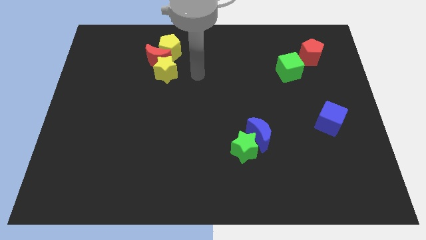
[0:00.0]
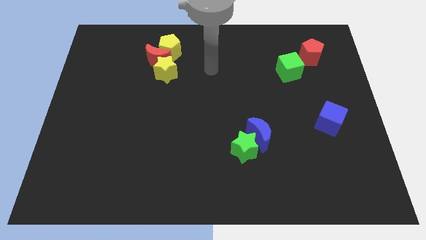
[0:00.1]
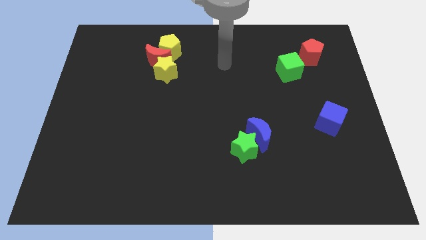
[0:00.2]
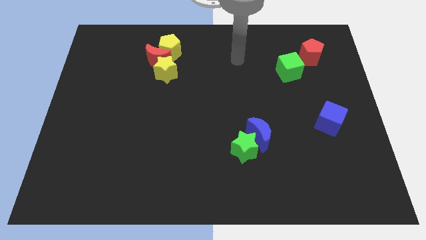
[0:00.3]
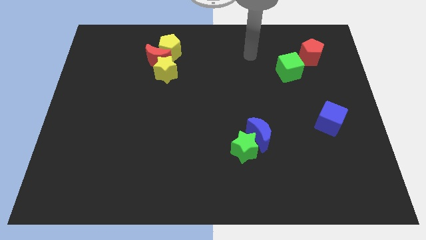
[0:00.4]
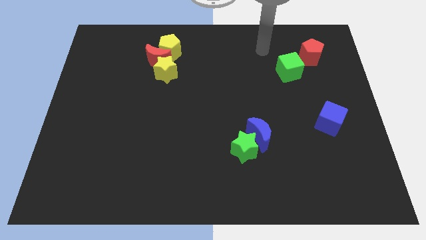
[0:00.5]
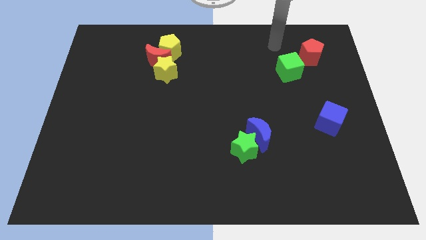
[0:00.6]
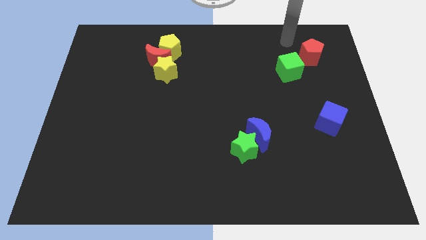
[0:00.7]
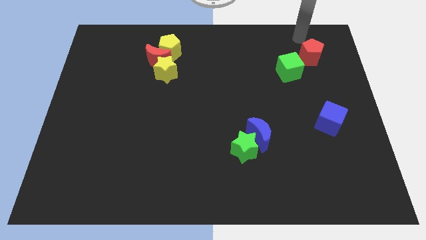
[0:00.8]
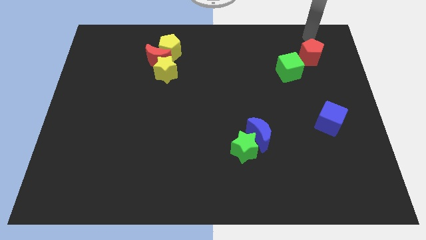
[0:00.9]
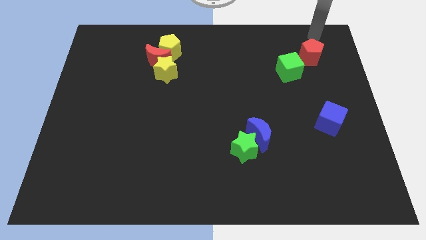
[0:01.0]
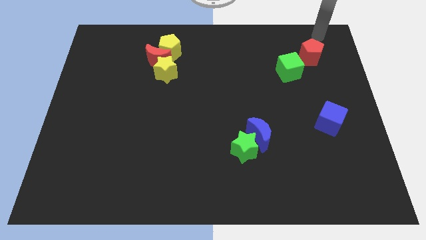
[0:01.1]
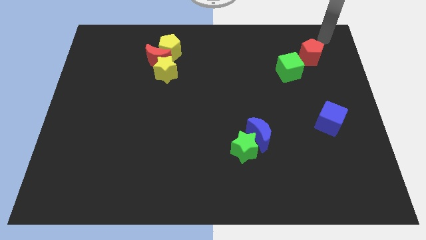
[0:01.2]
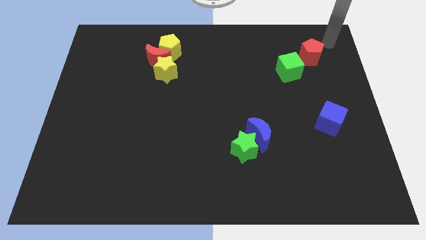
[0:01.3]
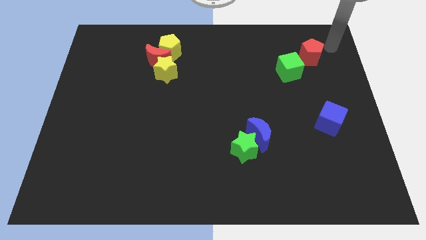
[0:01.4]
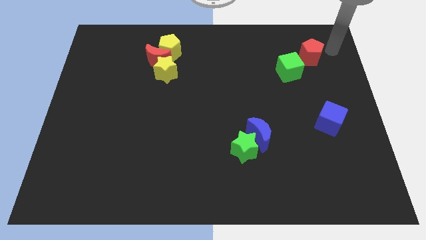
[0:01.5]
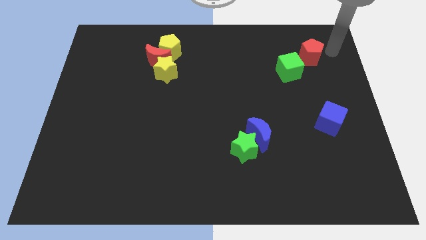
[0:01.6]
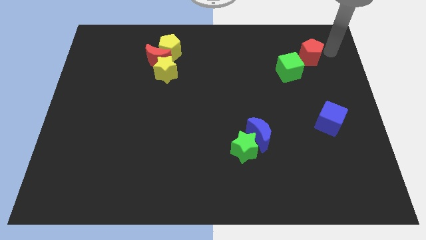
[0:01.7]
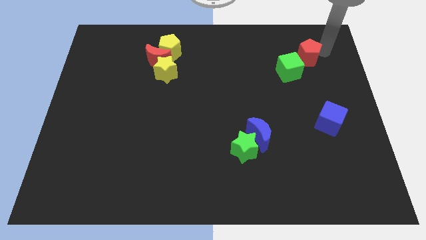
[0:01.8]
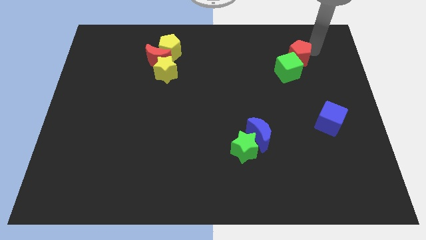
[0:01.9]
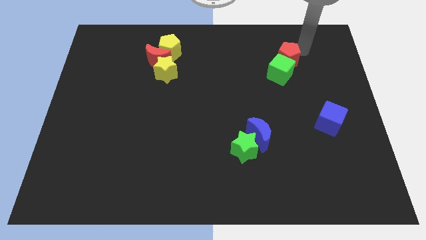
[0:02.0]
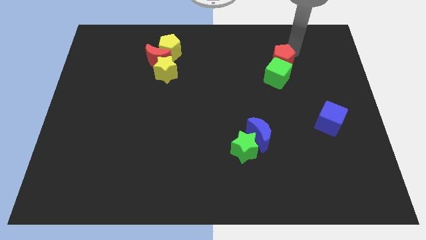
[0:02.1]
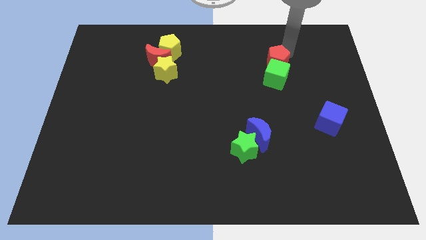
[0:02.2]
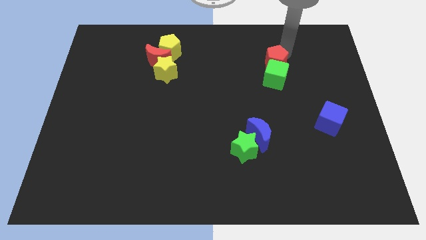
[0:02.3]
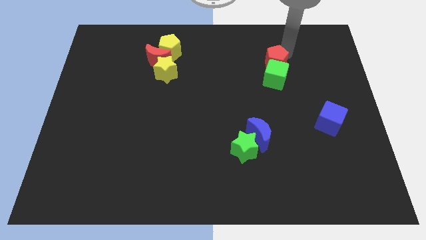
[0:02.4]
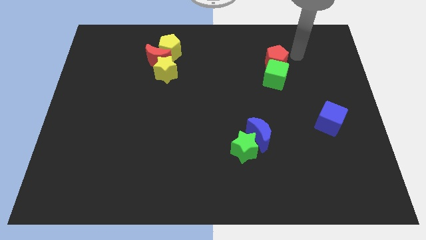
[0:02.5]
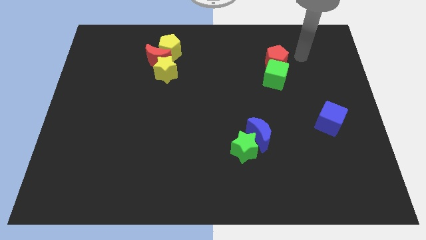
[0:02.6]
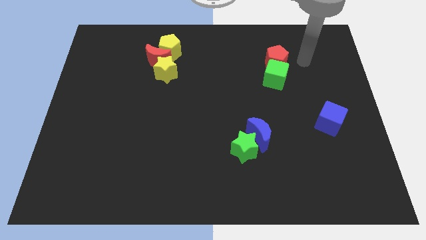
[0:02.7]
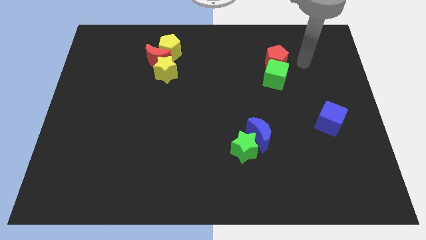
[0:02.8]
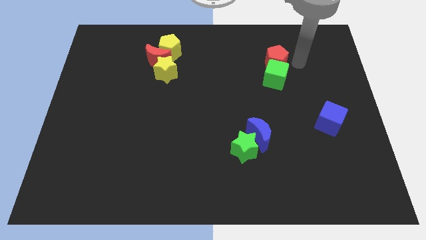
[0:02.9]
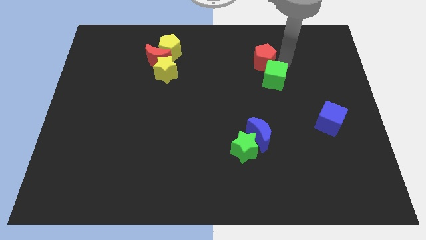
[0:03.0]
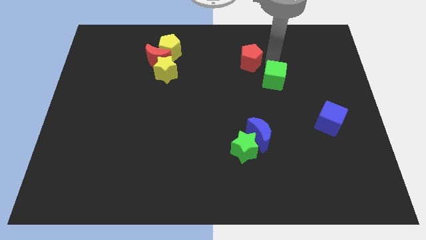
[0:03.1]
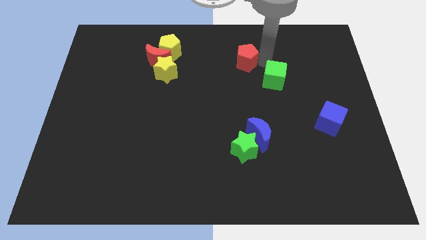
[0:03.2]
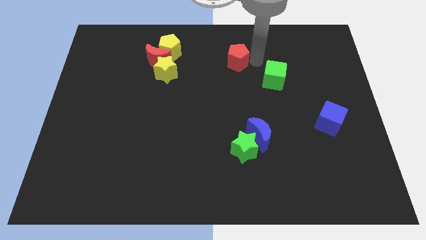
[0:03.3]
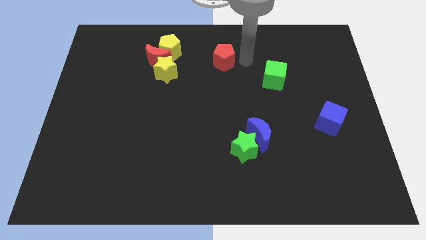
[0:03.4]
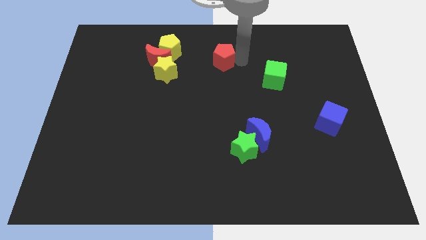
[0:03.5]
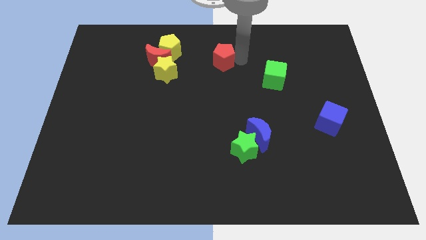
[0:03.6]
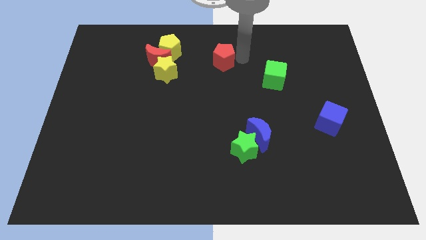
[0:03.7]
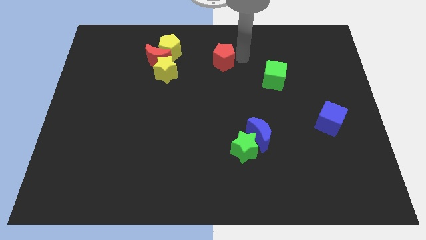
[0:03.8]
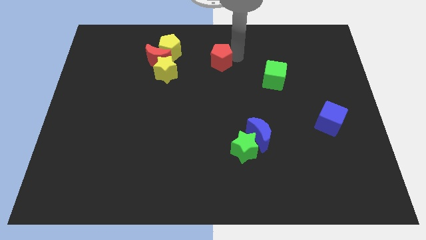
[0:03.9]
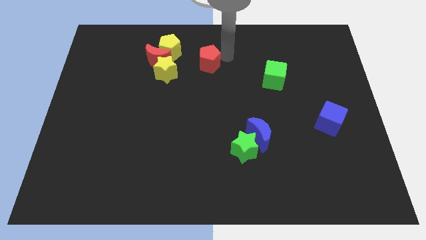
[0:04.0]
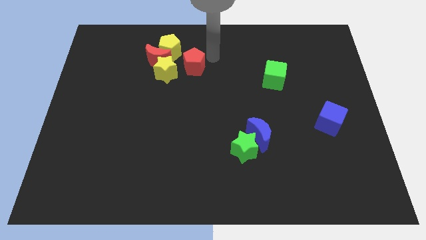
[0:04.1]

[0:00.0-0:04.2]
drag the red pentagon towards the red crescent

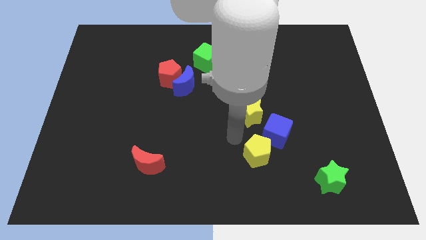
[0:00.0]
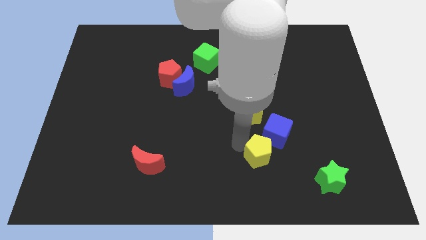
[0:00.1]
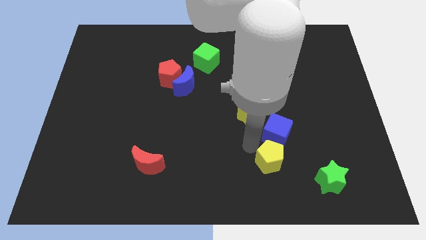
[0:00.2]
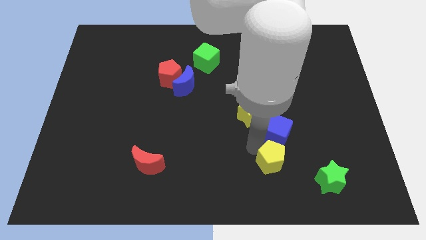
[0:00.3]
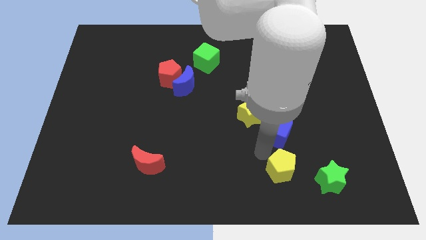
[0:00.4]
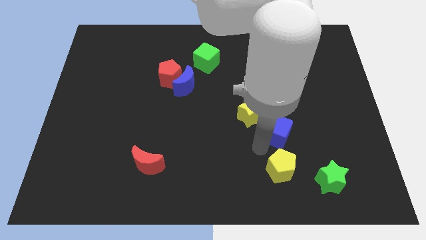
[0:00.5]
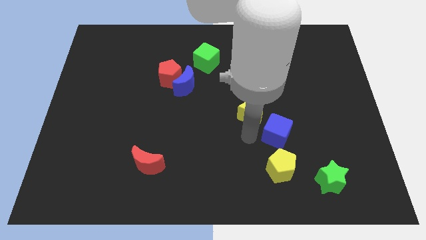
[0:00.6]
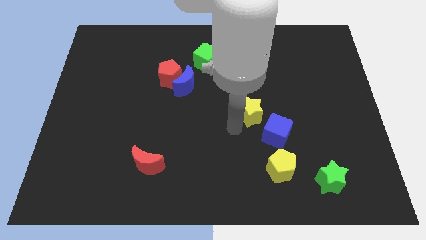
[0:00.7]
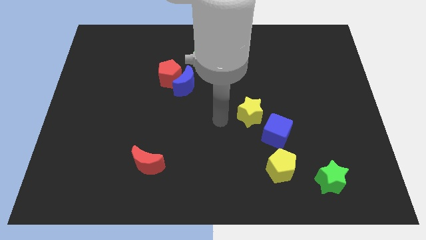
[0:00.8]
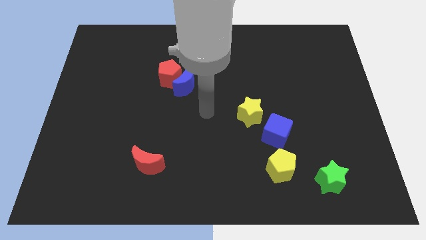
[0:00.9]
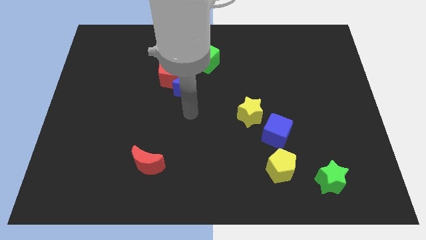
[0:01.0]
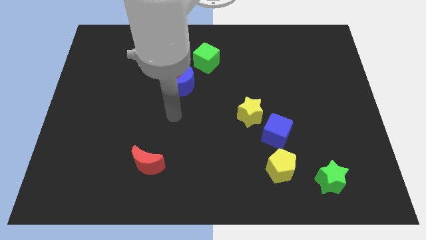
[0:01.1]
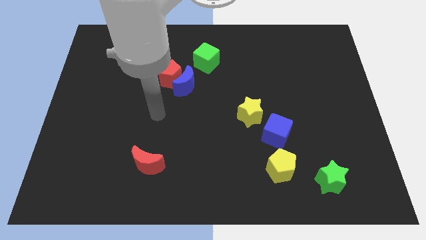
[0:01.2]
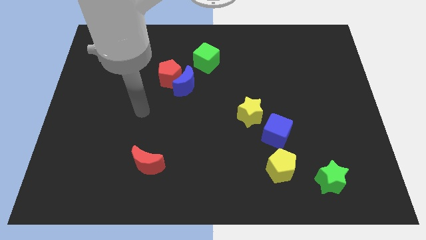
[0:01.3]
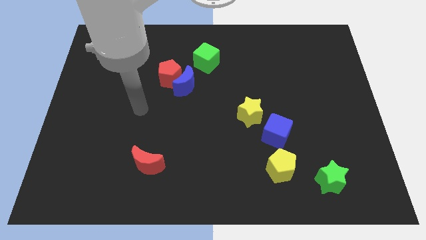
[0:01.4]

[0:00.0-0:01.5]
put the yellow pentagon vertically below the blue cube

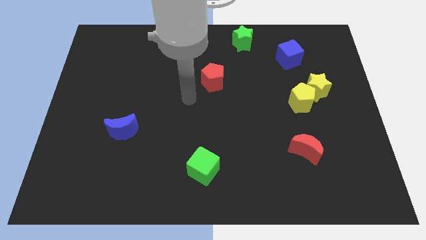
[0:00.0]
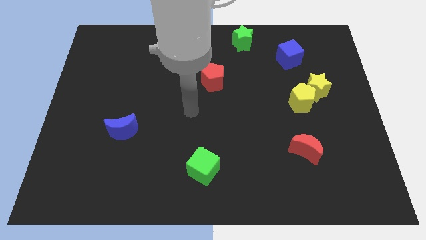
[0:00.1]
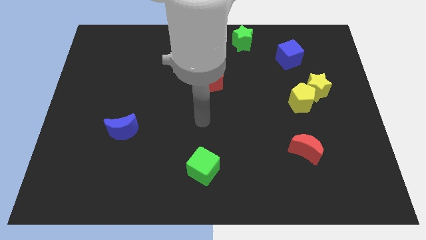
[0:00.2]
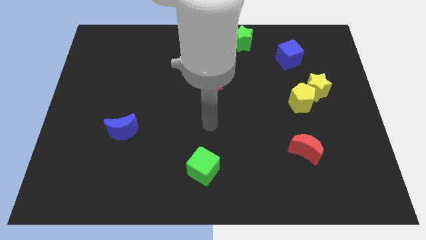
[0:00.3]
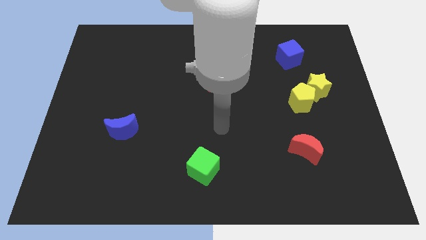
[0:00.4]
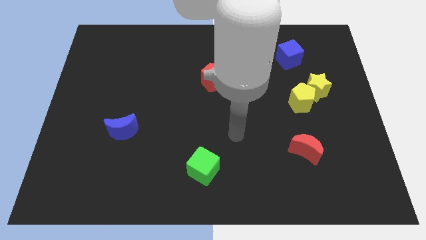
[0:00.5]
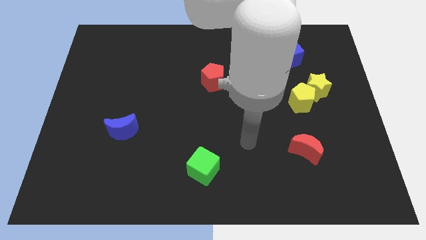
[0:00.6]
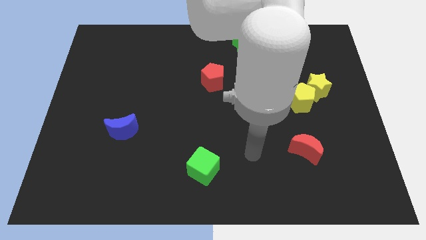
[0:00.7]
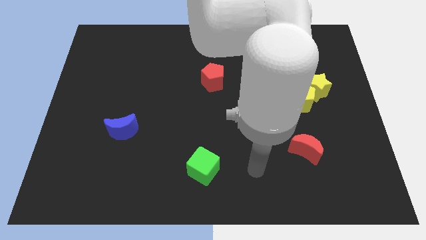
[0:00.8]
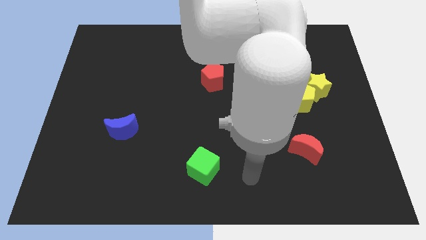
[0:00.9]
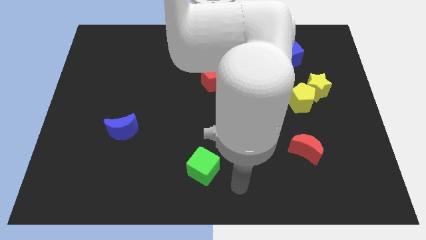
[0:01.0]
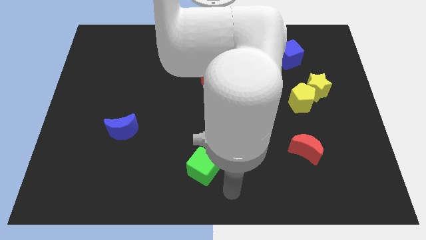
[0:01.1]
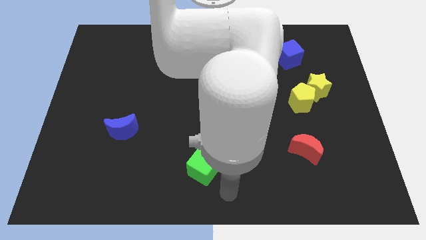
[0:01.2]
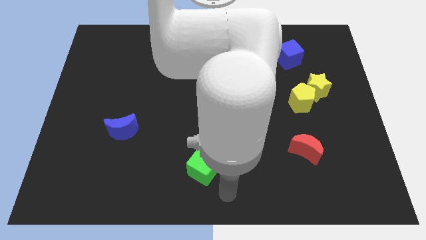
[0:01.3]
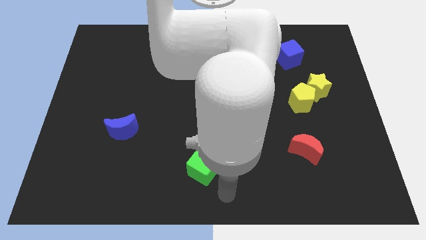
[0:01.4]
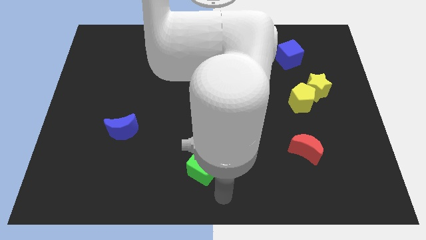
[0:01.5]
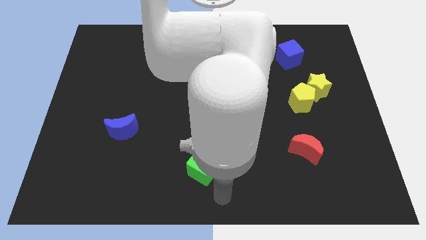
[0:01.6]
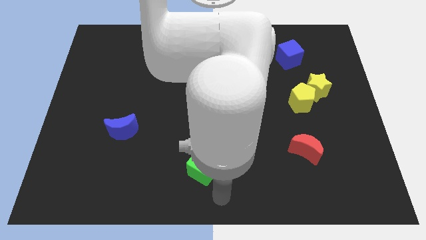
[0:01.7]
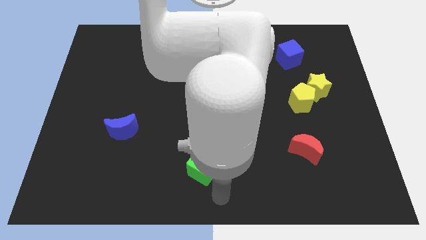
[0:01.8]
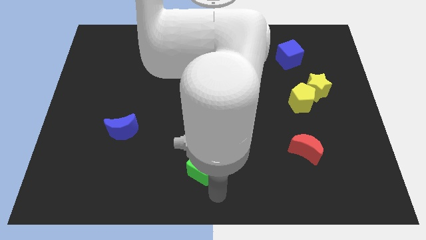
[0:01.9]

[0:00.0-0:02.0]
point the arm at the bottom of the green cube

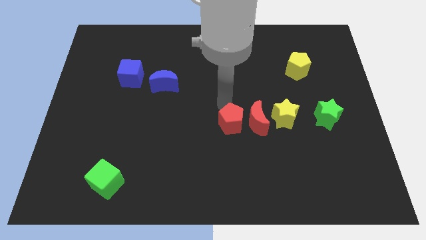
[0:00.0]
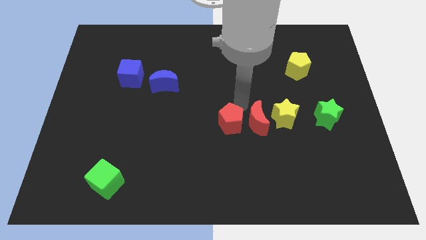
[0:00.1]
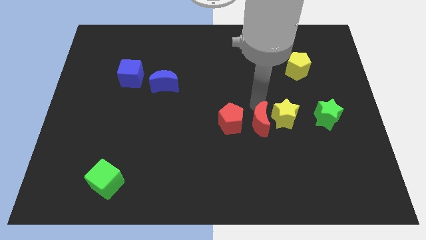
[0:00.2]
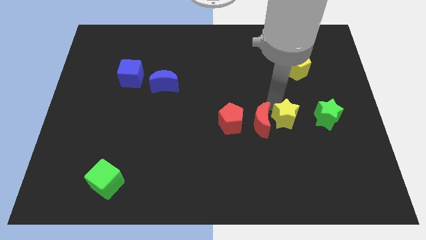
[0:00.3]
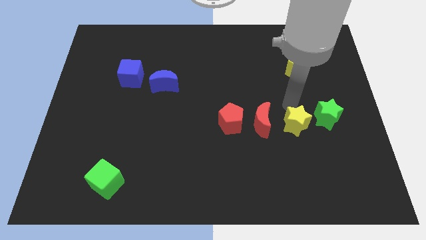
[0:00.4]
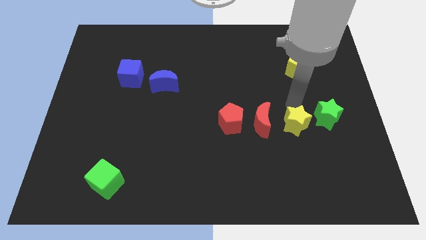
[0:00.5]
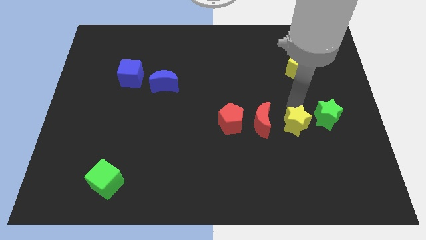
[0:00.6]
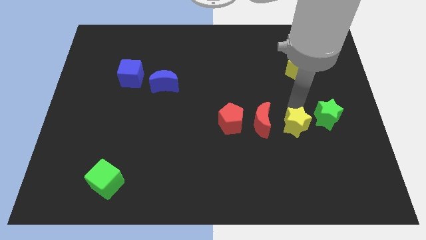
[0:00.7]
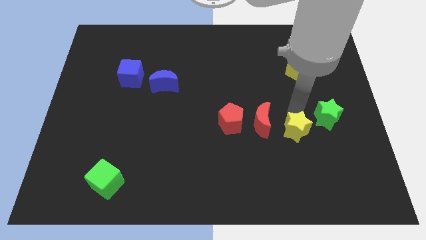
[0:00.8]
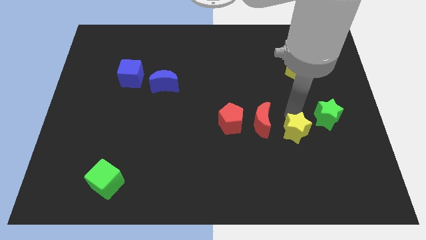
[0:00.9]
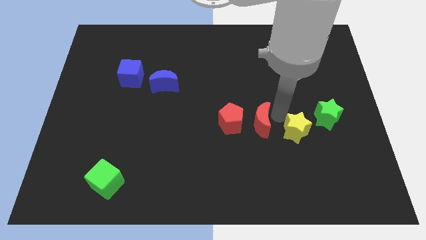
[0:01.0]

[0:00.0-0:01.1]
push the yellow star slightly to the bottom

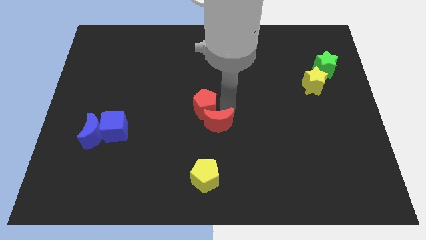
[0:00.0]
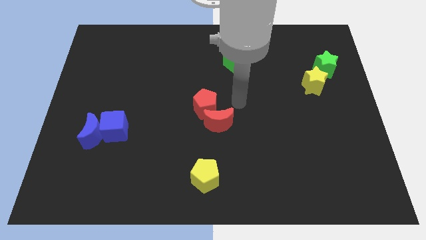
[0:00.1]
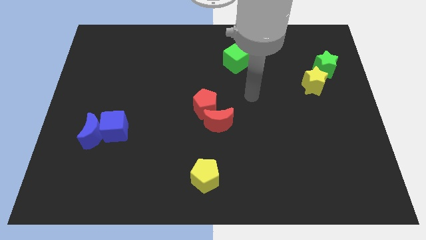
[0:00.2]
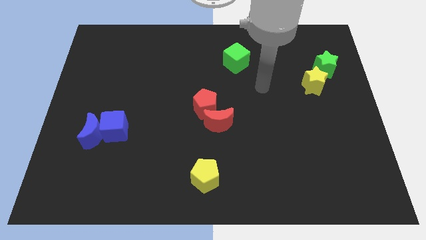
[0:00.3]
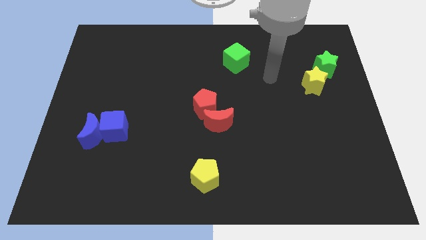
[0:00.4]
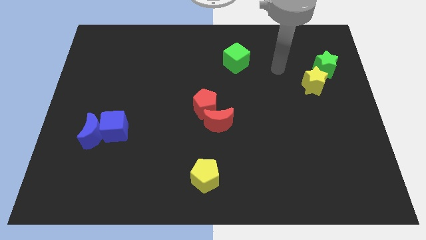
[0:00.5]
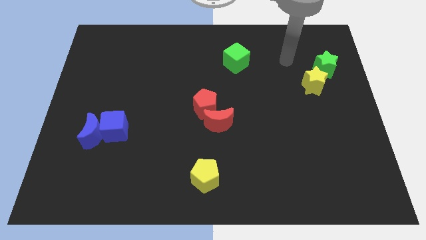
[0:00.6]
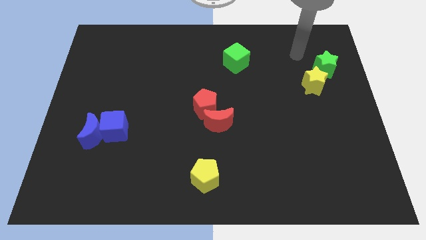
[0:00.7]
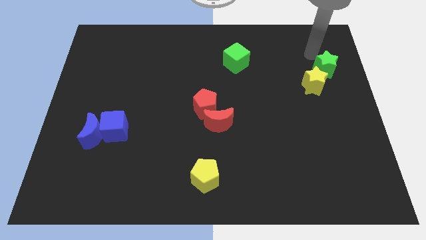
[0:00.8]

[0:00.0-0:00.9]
move your arm towards the top right corner
